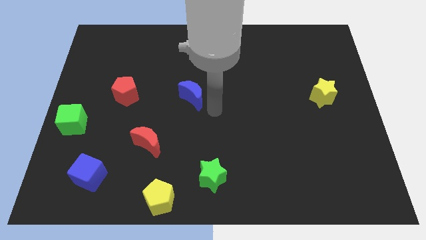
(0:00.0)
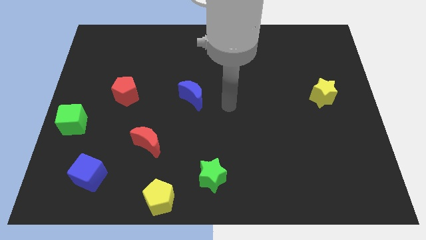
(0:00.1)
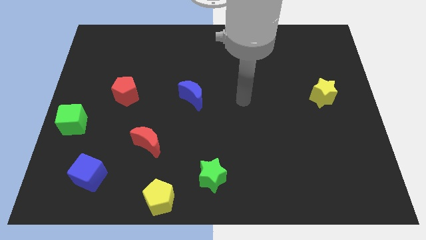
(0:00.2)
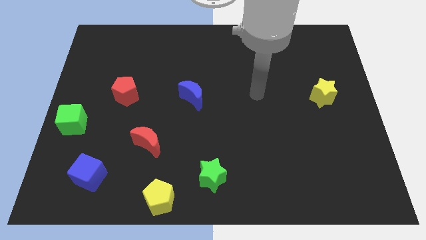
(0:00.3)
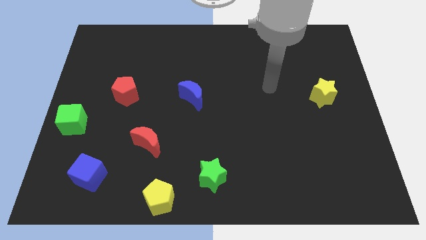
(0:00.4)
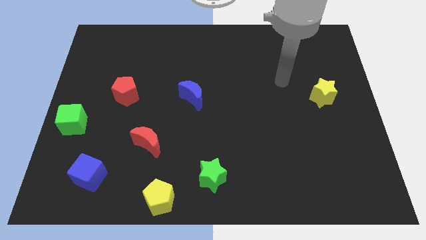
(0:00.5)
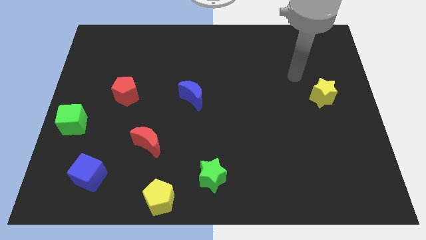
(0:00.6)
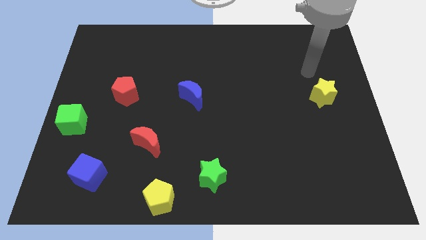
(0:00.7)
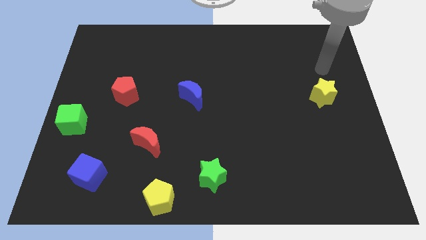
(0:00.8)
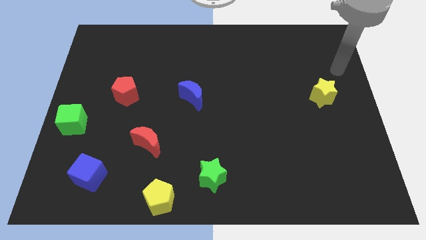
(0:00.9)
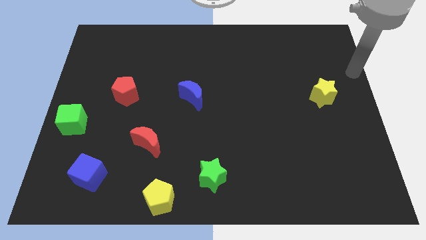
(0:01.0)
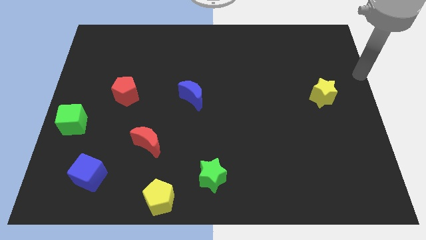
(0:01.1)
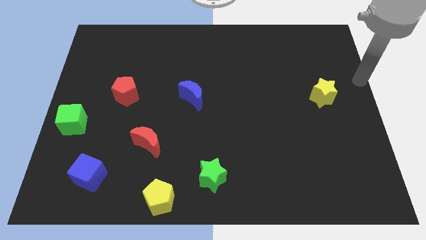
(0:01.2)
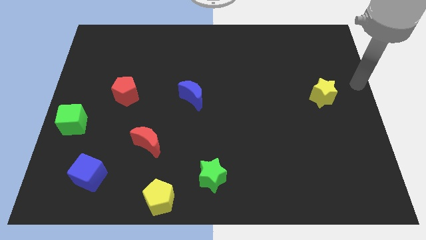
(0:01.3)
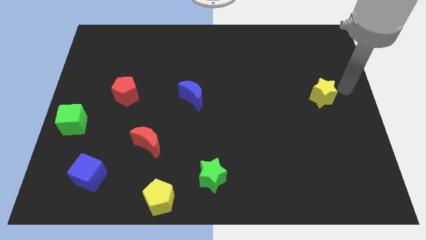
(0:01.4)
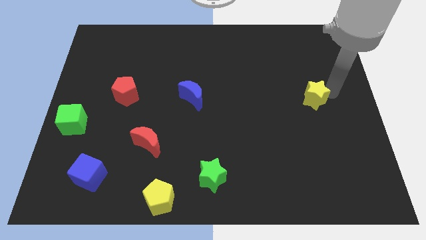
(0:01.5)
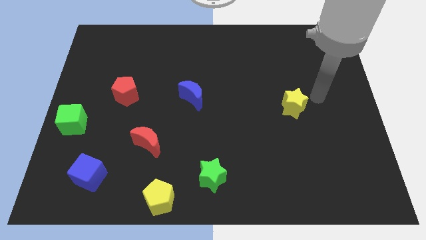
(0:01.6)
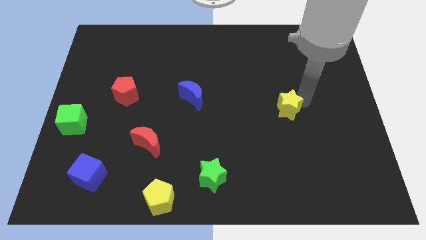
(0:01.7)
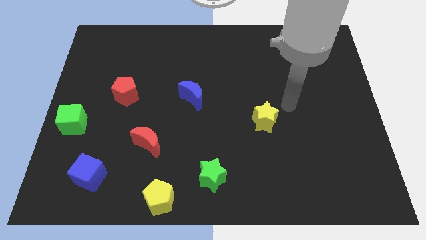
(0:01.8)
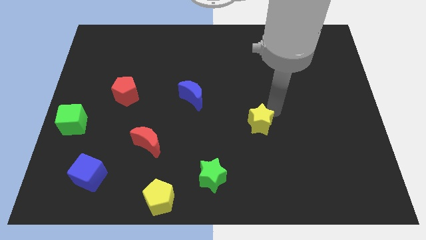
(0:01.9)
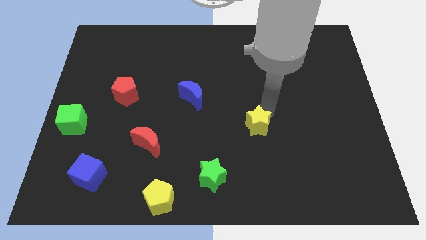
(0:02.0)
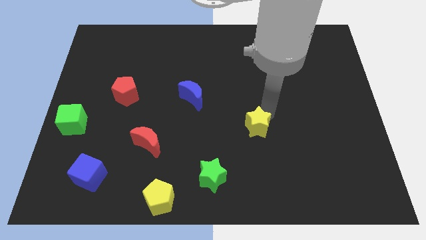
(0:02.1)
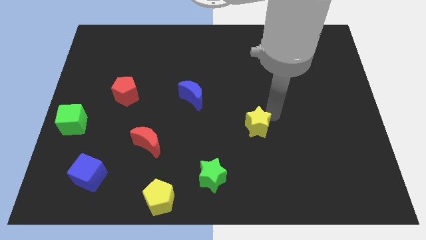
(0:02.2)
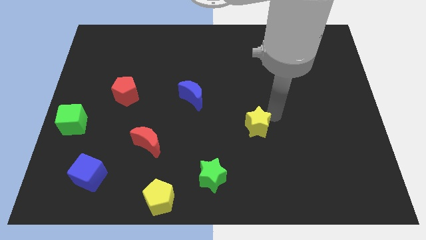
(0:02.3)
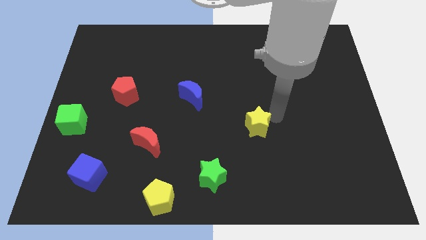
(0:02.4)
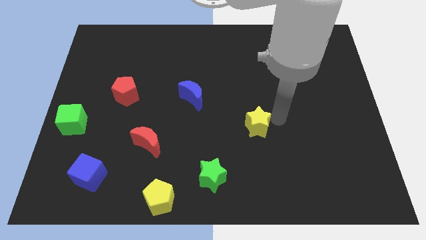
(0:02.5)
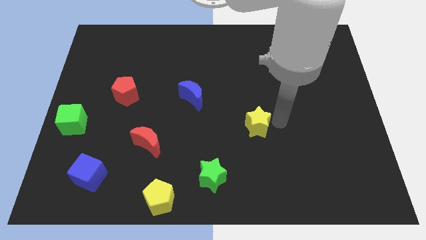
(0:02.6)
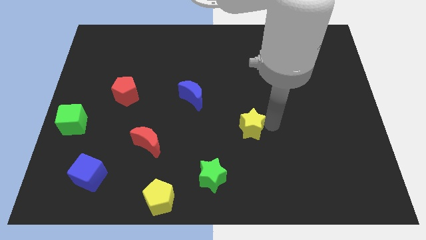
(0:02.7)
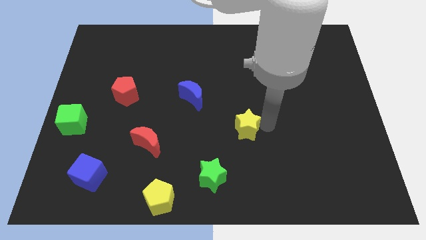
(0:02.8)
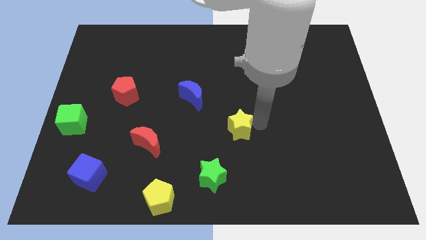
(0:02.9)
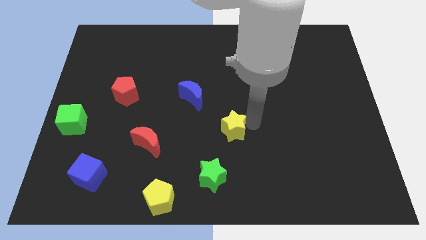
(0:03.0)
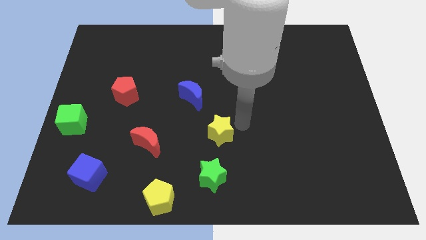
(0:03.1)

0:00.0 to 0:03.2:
move yellow star to bottom right of blue moon

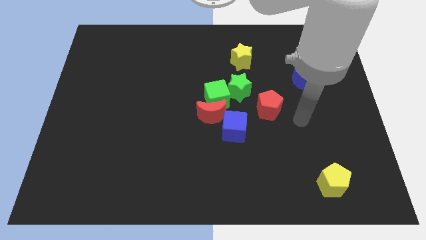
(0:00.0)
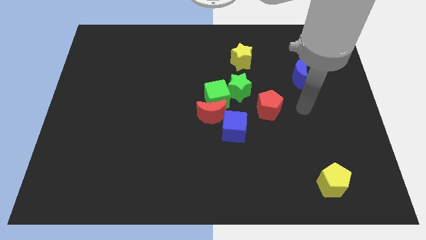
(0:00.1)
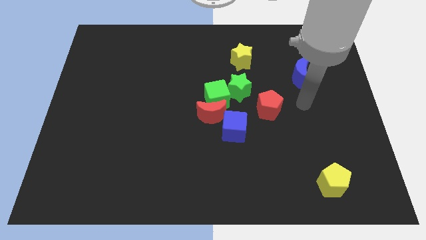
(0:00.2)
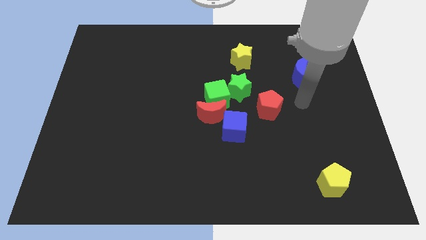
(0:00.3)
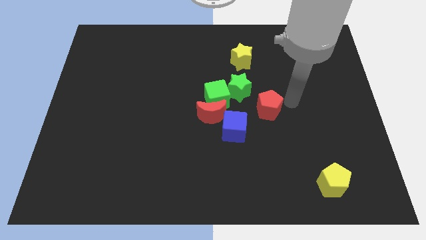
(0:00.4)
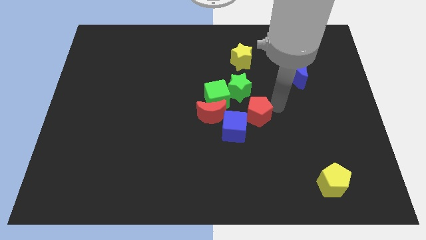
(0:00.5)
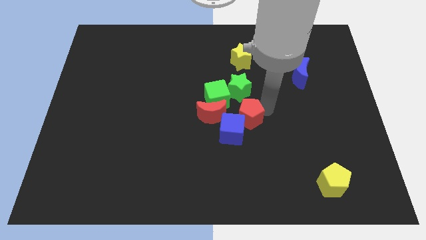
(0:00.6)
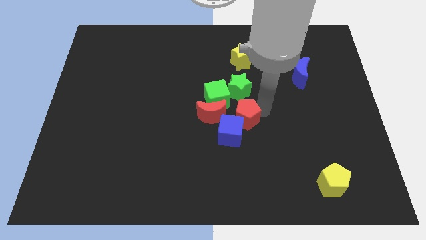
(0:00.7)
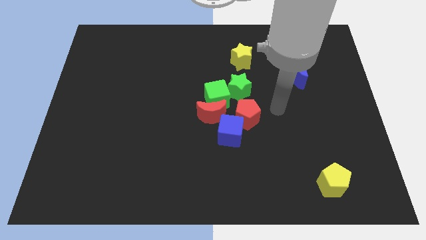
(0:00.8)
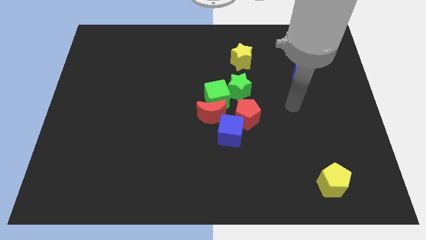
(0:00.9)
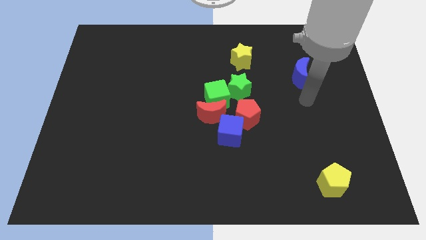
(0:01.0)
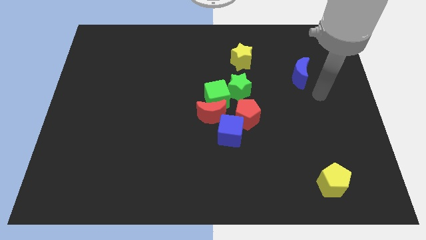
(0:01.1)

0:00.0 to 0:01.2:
push the red pentagon into the blue cube

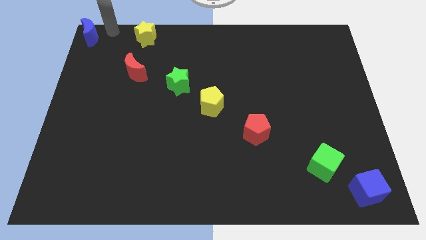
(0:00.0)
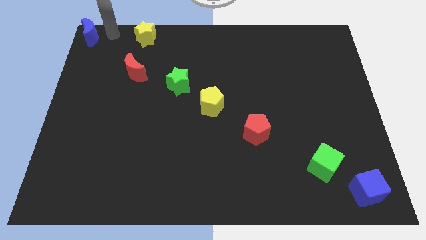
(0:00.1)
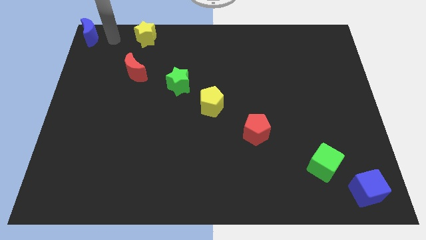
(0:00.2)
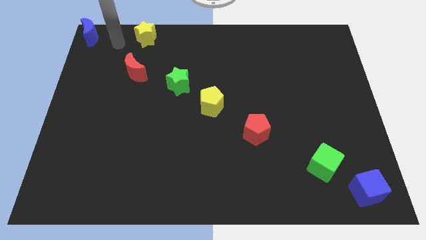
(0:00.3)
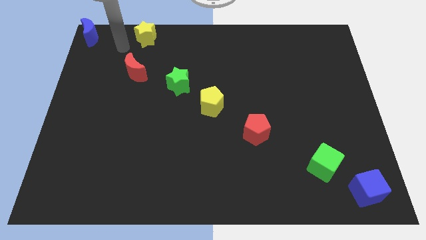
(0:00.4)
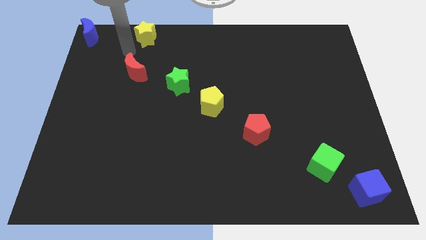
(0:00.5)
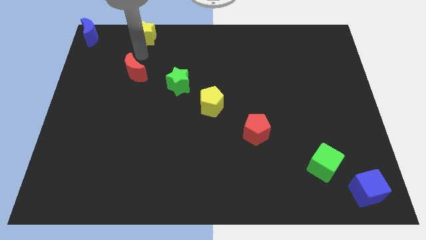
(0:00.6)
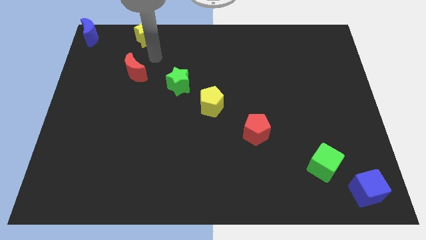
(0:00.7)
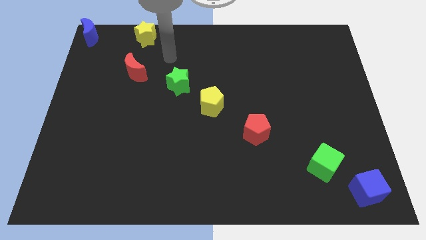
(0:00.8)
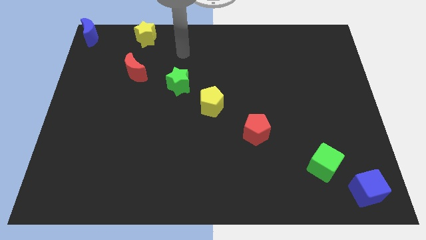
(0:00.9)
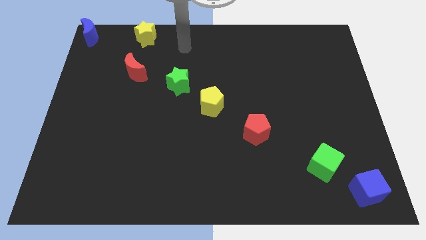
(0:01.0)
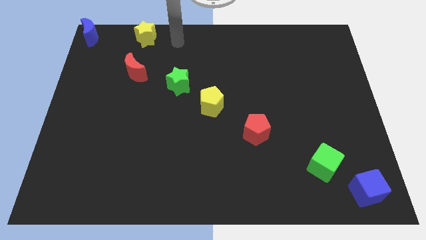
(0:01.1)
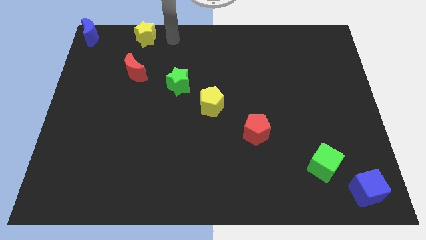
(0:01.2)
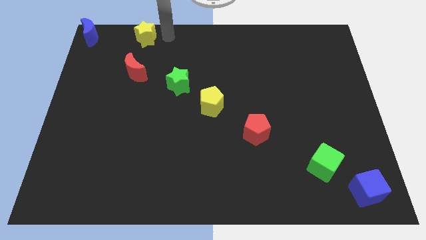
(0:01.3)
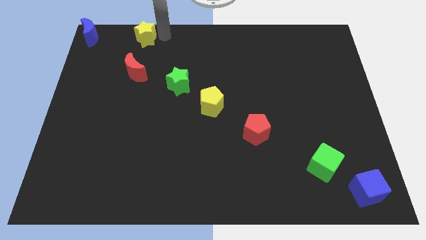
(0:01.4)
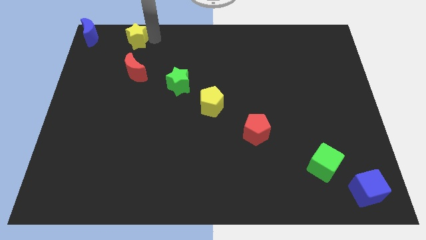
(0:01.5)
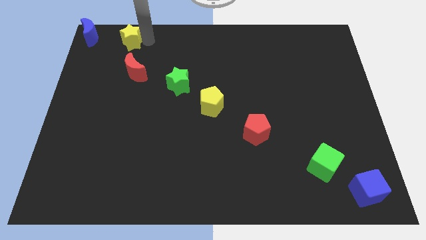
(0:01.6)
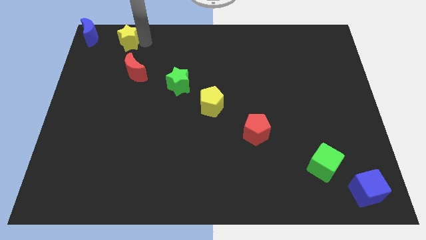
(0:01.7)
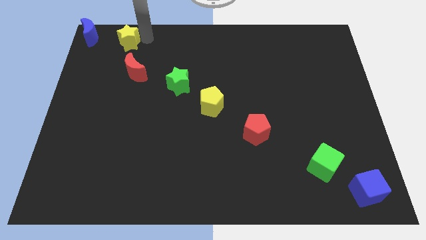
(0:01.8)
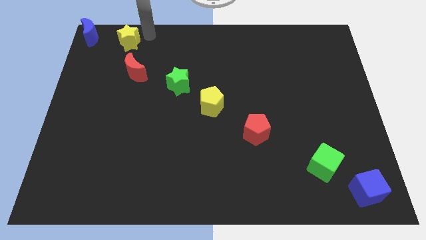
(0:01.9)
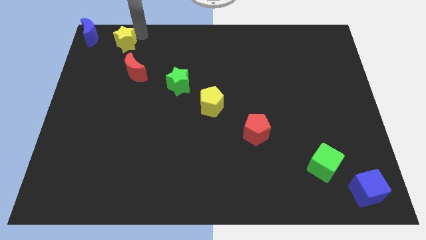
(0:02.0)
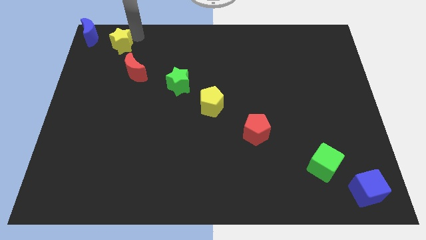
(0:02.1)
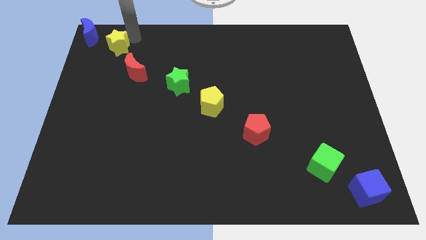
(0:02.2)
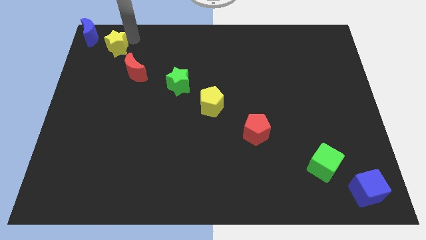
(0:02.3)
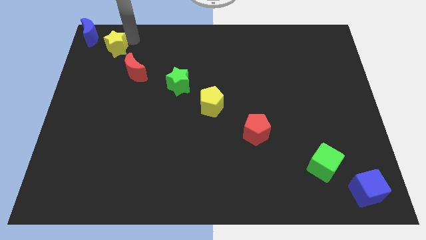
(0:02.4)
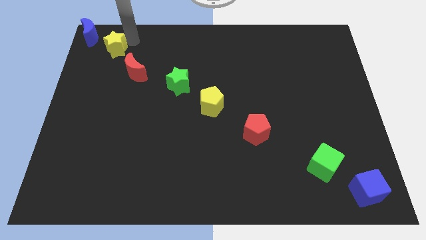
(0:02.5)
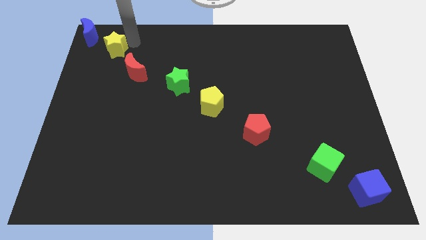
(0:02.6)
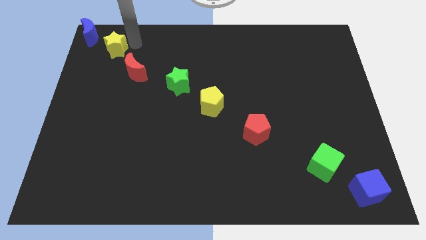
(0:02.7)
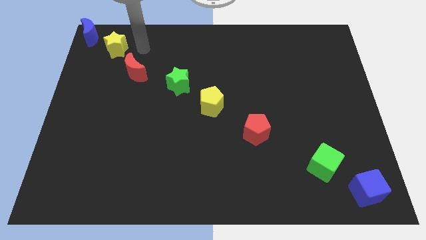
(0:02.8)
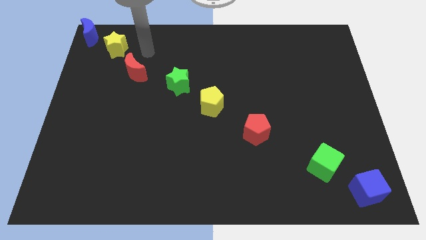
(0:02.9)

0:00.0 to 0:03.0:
place the yellow star diagonal to the blue moon

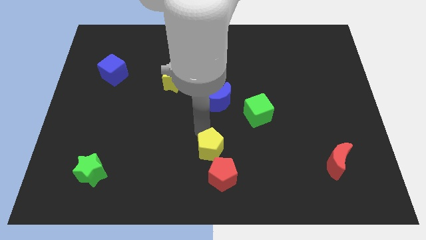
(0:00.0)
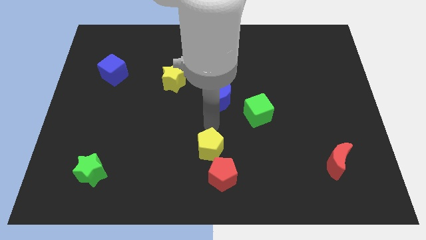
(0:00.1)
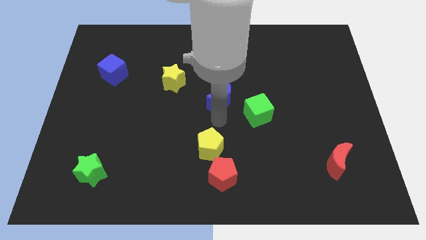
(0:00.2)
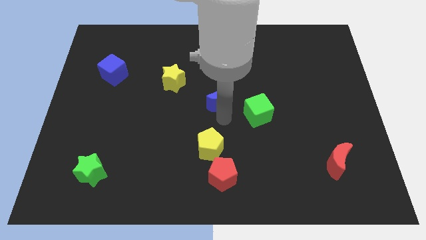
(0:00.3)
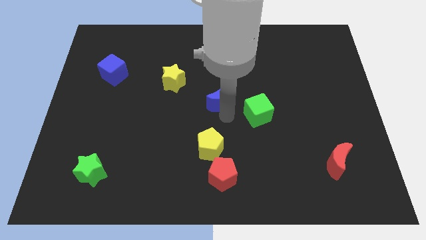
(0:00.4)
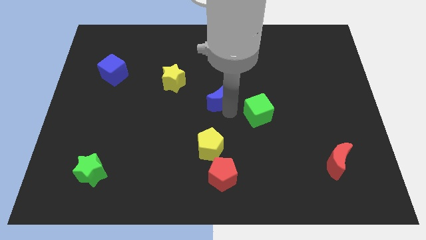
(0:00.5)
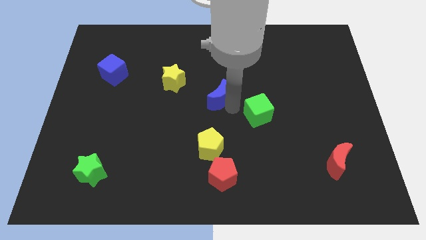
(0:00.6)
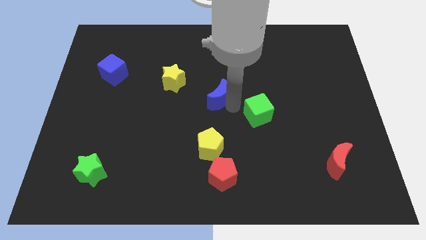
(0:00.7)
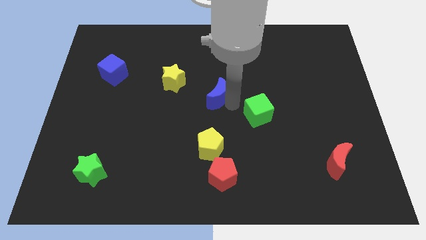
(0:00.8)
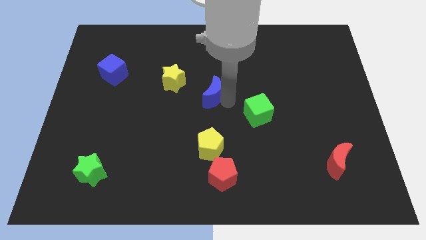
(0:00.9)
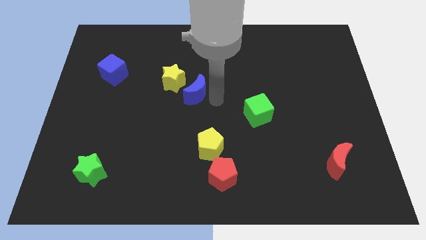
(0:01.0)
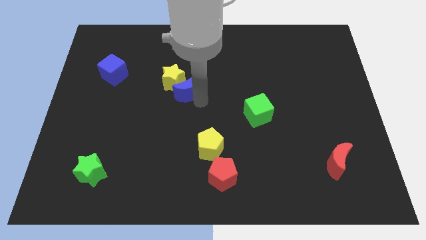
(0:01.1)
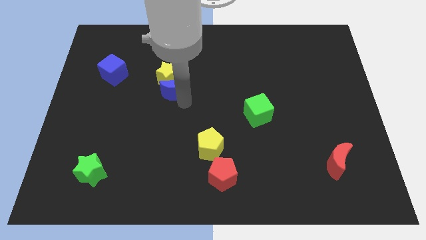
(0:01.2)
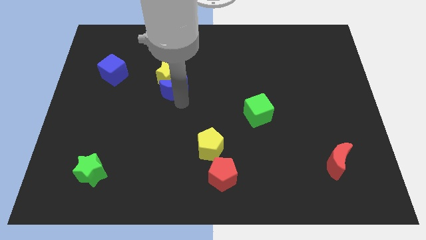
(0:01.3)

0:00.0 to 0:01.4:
push the blue crescent to the bottom of the yellow star

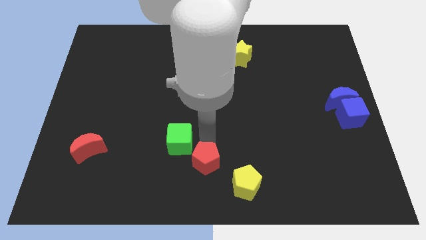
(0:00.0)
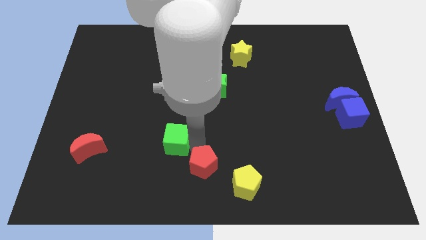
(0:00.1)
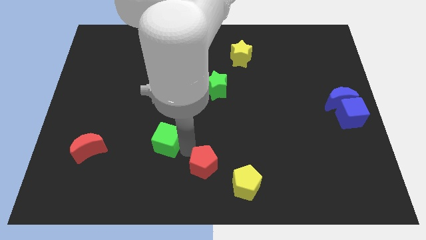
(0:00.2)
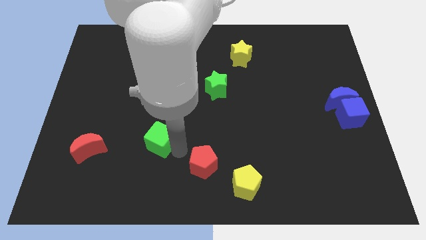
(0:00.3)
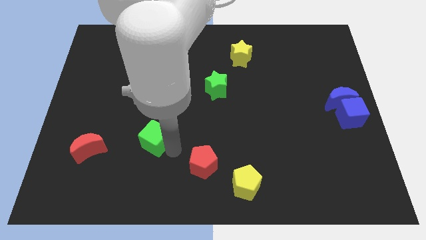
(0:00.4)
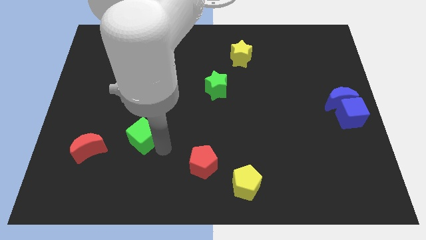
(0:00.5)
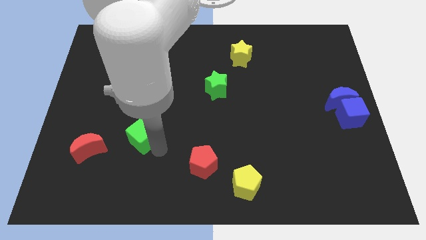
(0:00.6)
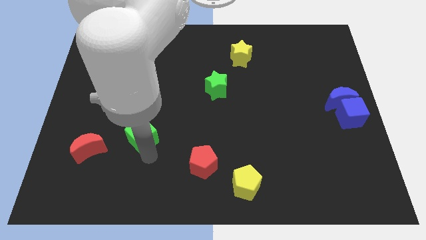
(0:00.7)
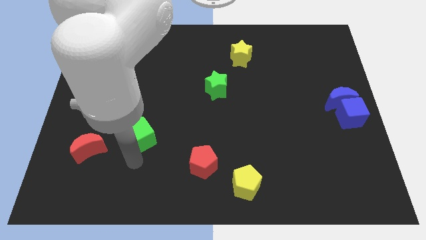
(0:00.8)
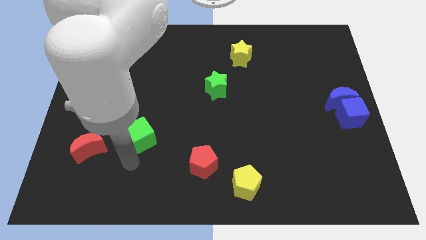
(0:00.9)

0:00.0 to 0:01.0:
push the green cube towards the left side of the board
